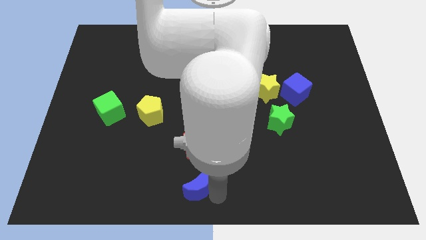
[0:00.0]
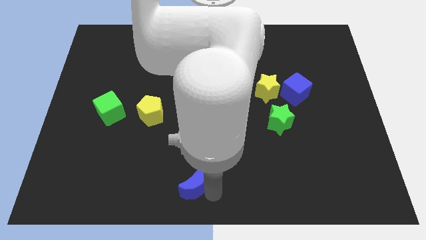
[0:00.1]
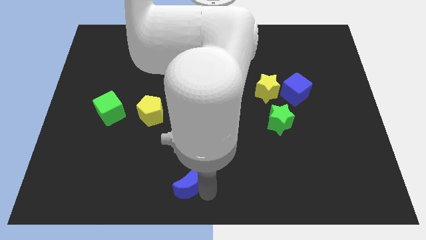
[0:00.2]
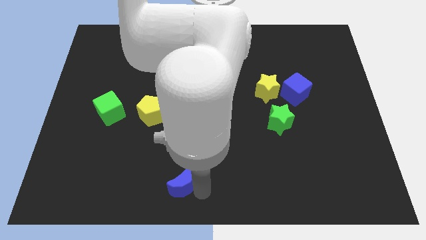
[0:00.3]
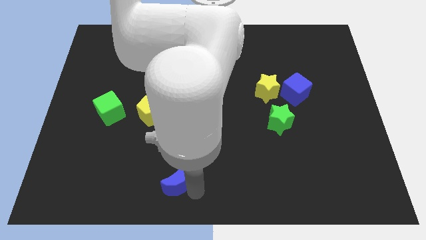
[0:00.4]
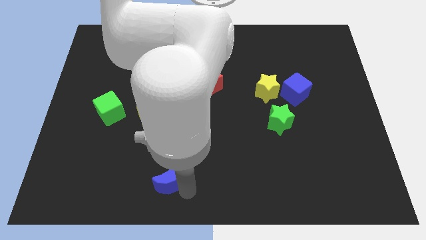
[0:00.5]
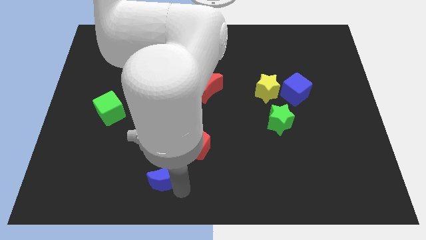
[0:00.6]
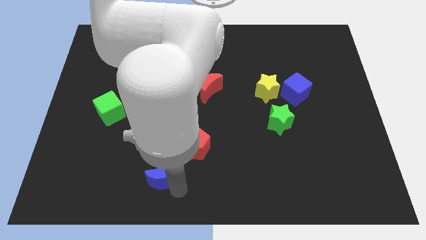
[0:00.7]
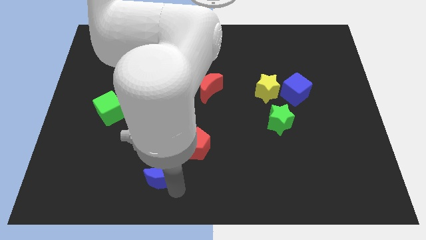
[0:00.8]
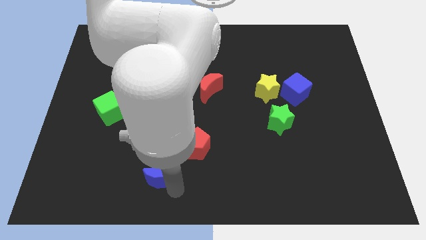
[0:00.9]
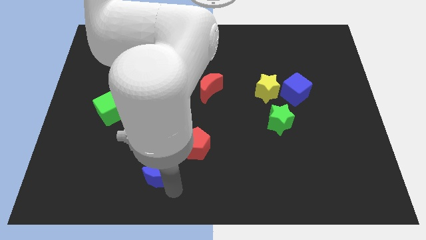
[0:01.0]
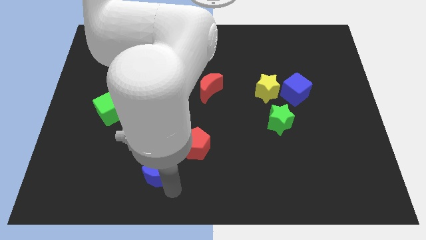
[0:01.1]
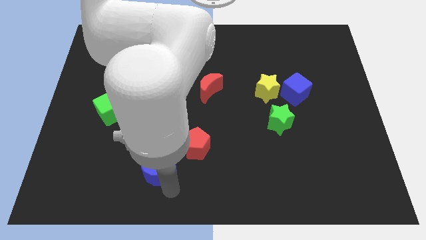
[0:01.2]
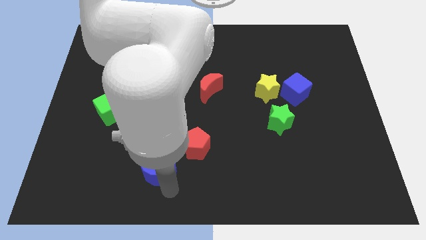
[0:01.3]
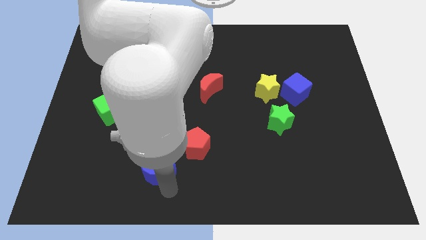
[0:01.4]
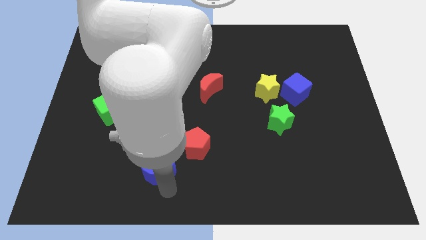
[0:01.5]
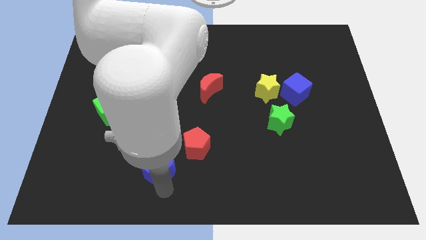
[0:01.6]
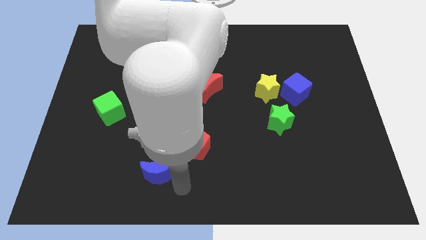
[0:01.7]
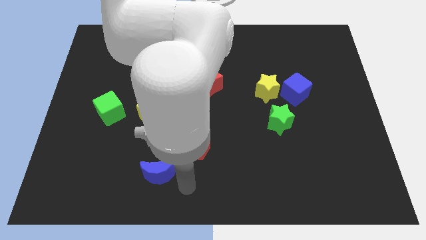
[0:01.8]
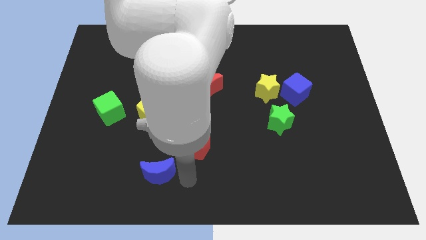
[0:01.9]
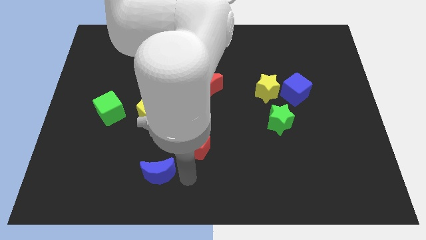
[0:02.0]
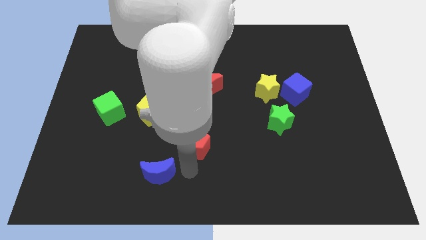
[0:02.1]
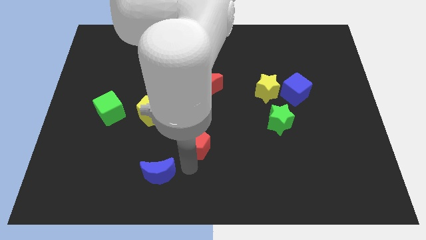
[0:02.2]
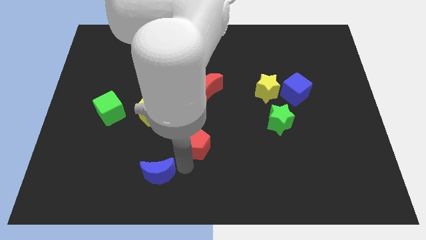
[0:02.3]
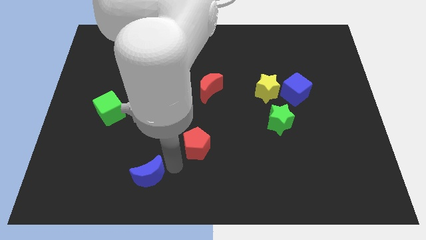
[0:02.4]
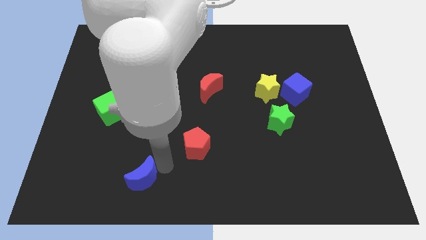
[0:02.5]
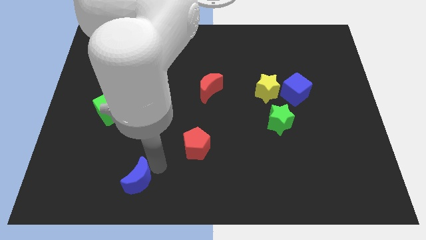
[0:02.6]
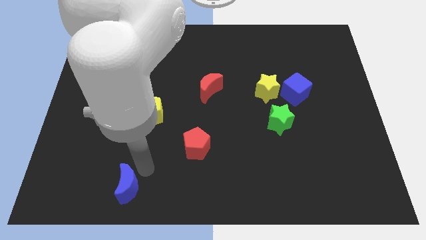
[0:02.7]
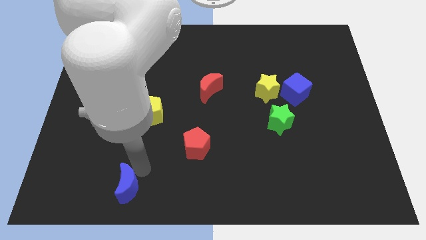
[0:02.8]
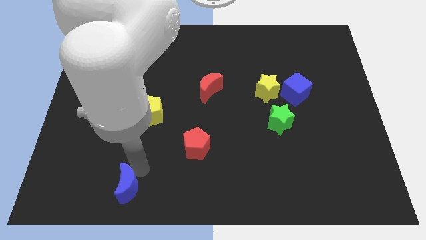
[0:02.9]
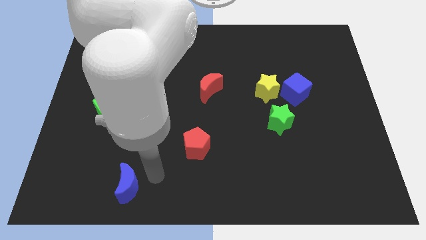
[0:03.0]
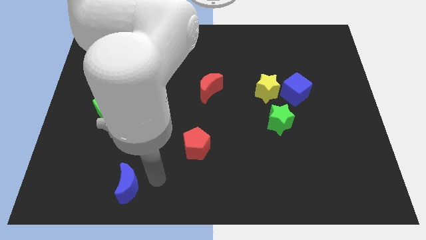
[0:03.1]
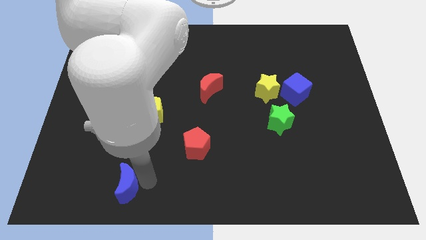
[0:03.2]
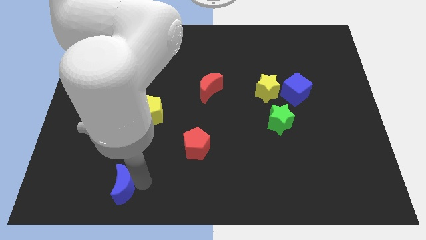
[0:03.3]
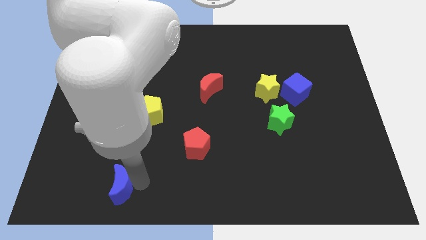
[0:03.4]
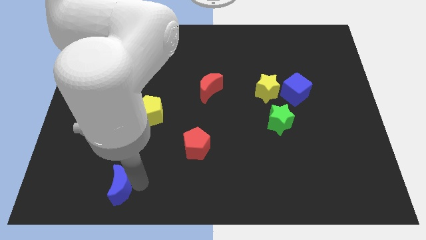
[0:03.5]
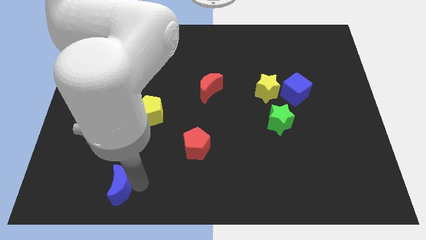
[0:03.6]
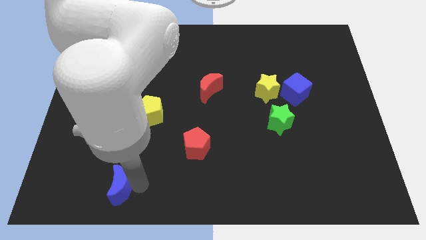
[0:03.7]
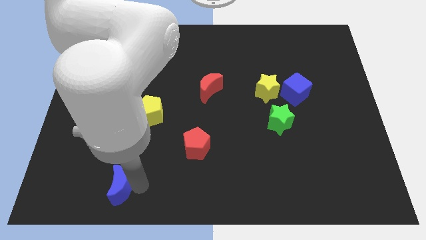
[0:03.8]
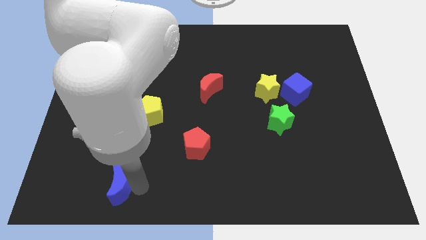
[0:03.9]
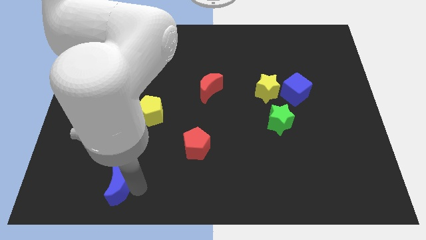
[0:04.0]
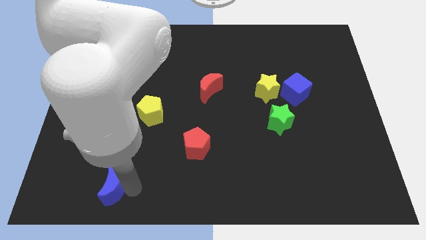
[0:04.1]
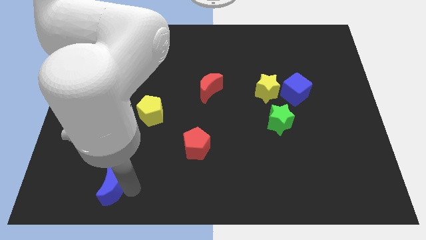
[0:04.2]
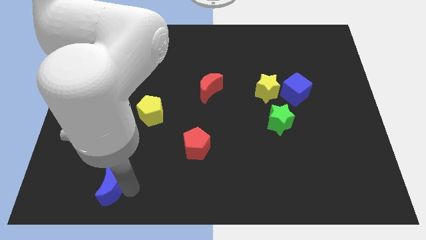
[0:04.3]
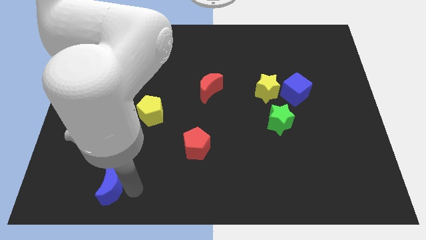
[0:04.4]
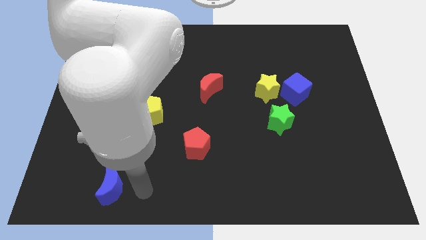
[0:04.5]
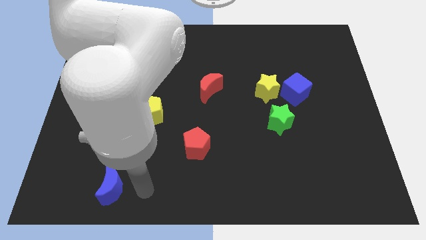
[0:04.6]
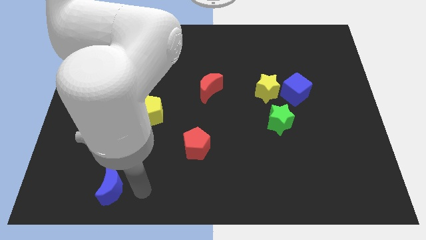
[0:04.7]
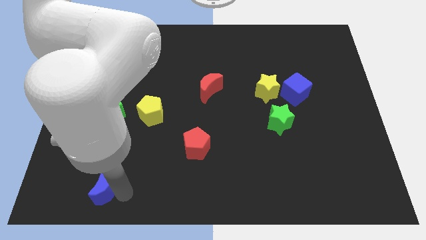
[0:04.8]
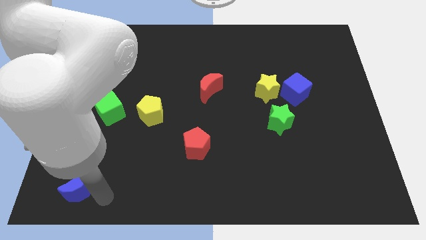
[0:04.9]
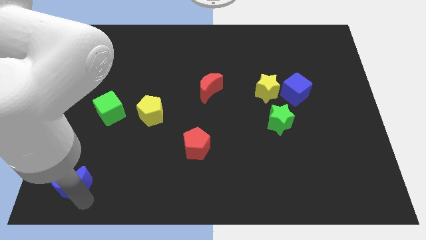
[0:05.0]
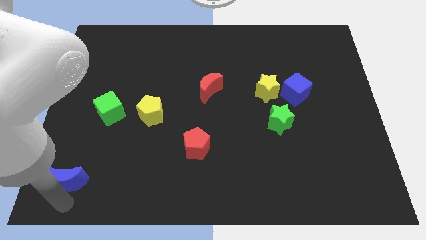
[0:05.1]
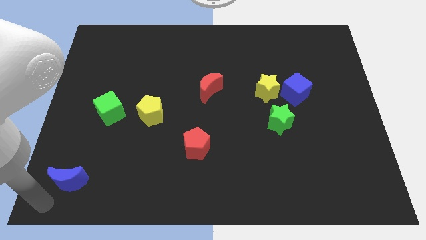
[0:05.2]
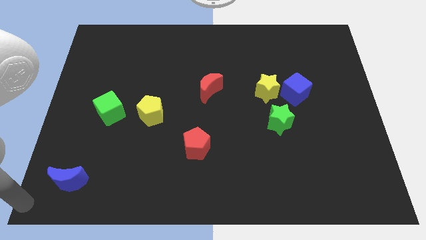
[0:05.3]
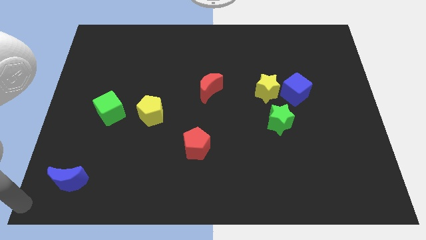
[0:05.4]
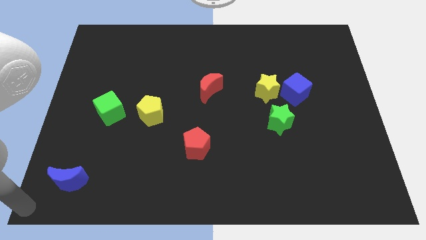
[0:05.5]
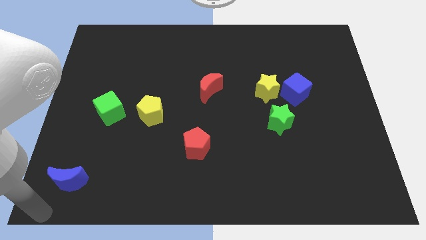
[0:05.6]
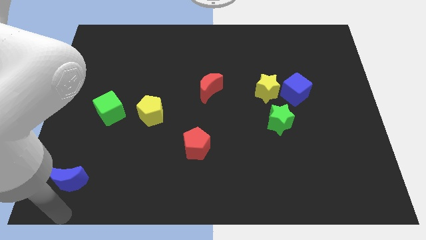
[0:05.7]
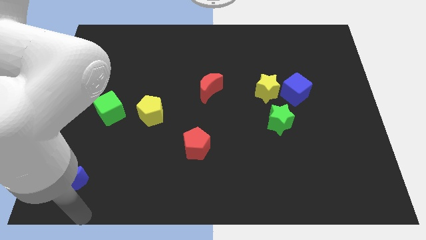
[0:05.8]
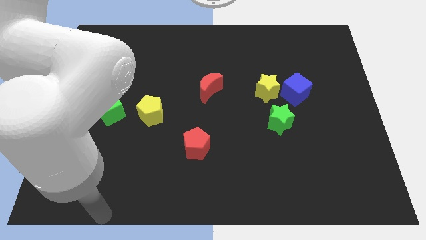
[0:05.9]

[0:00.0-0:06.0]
push the blue crescent to the bottom left corner of the board

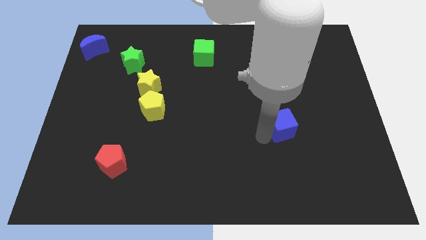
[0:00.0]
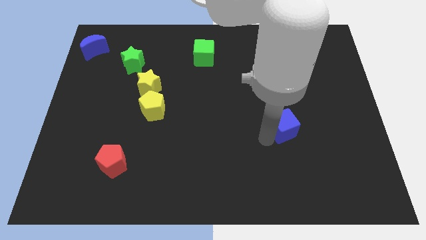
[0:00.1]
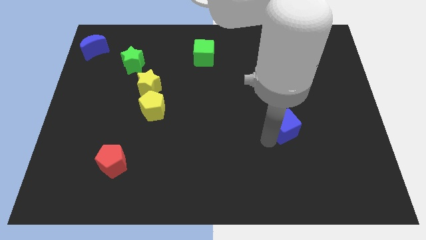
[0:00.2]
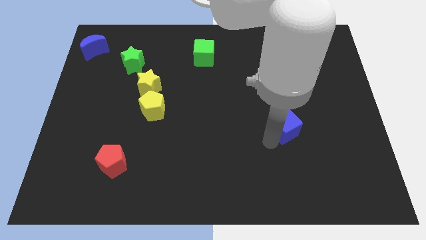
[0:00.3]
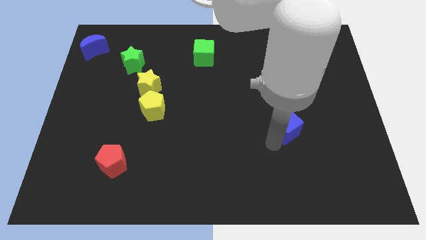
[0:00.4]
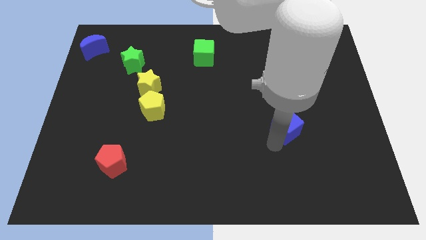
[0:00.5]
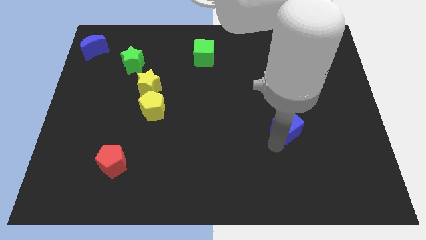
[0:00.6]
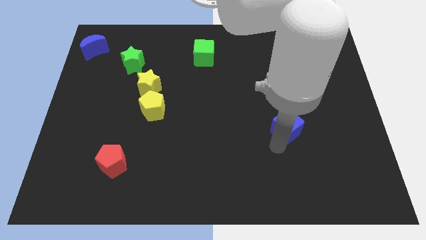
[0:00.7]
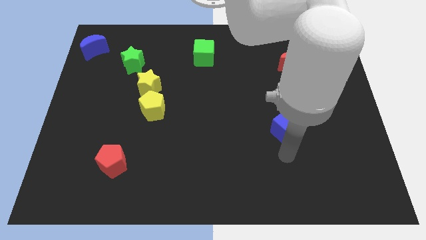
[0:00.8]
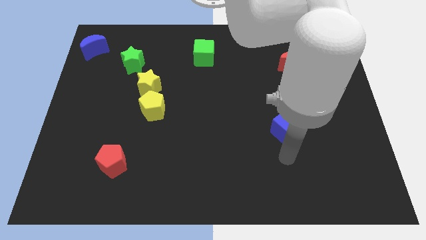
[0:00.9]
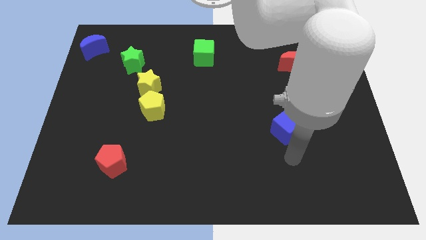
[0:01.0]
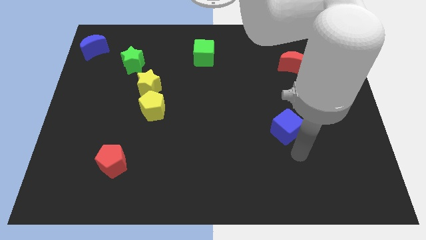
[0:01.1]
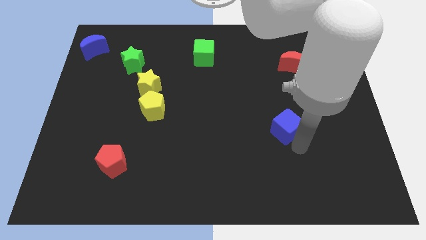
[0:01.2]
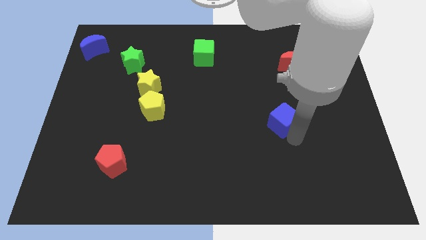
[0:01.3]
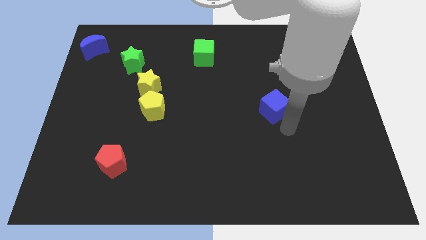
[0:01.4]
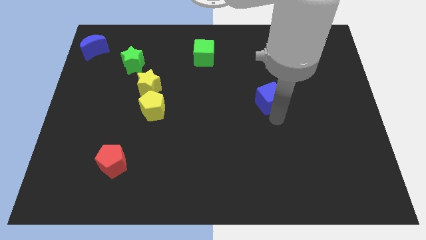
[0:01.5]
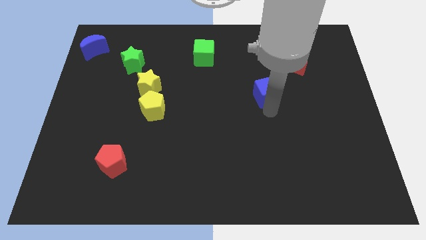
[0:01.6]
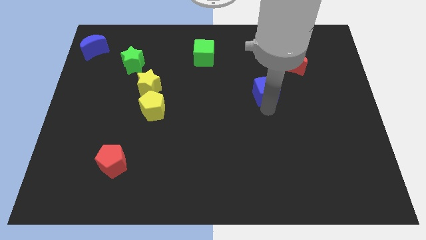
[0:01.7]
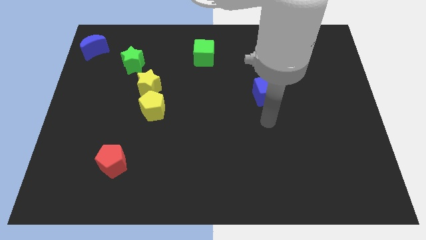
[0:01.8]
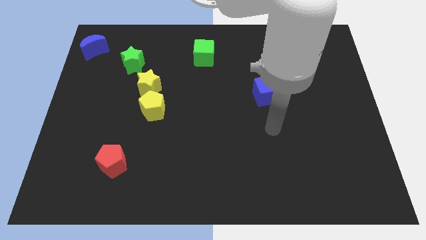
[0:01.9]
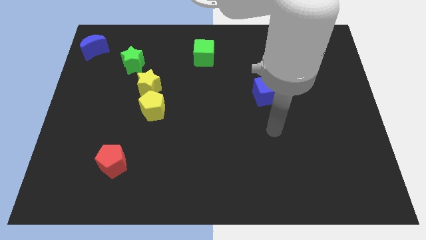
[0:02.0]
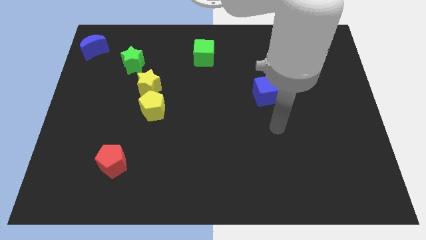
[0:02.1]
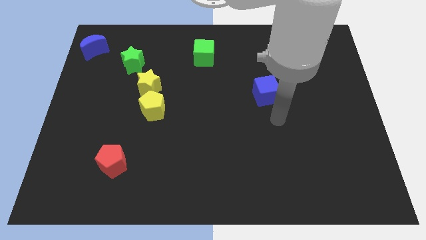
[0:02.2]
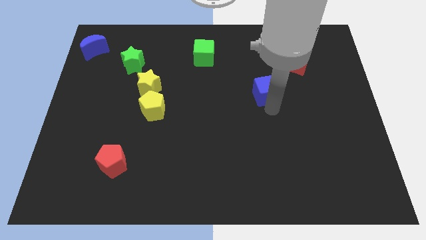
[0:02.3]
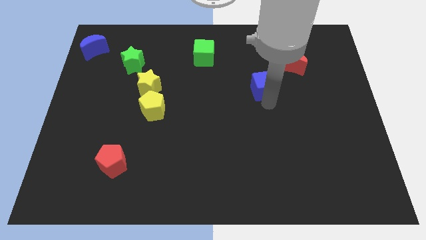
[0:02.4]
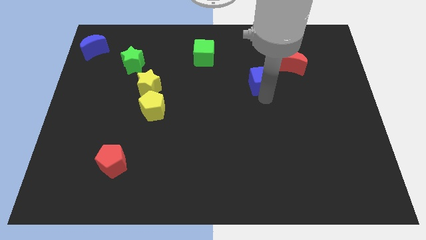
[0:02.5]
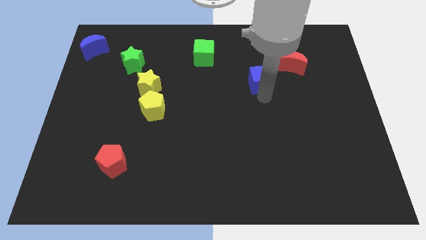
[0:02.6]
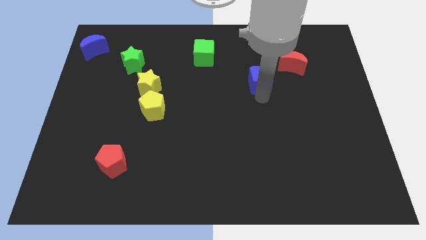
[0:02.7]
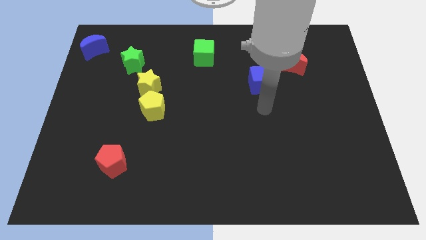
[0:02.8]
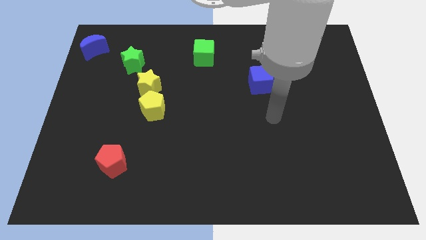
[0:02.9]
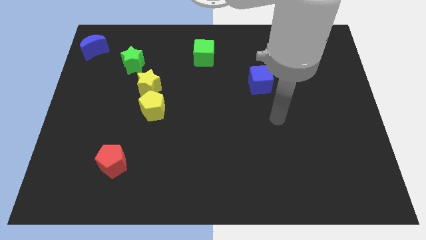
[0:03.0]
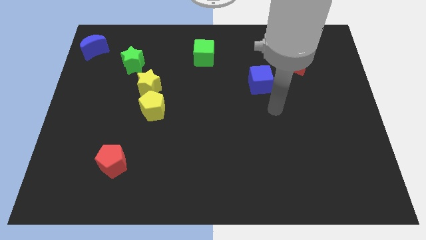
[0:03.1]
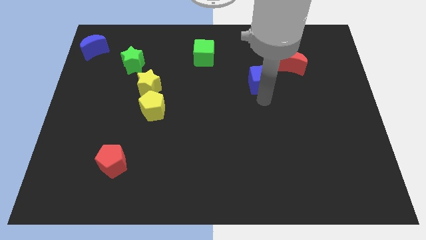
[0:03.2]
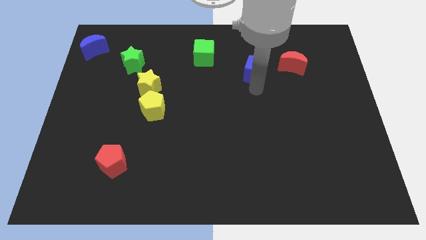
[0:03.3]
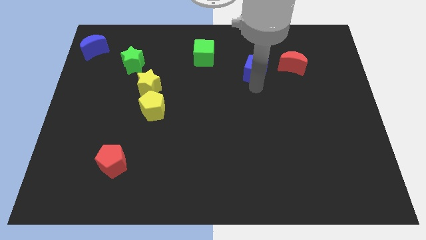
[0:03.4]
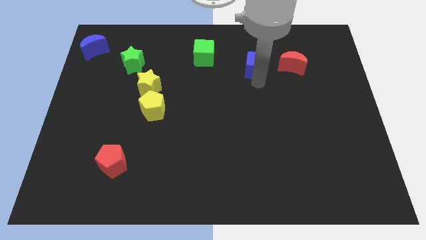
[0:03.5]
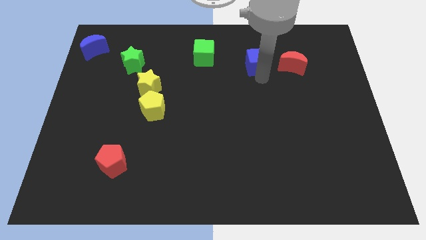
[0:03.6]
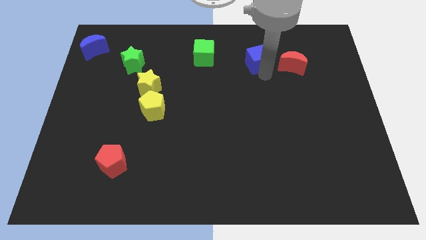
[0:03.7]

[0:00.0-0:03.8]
move the blue cube parallel to the left of the red crescent
